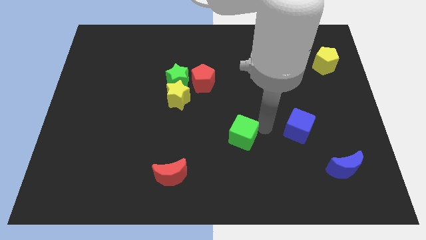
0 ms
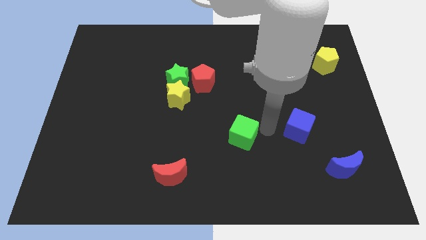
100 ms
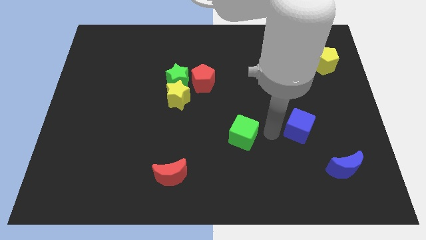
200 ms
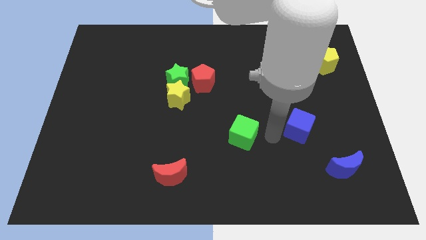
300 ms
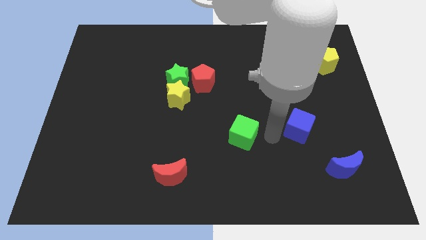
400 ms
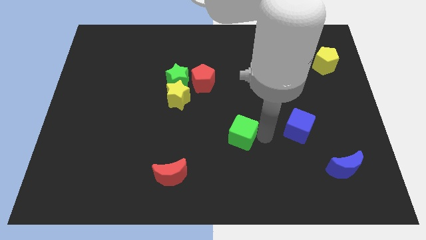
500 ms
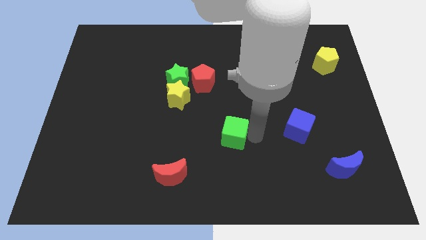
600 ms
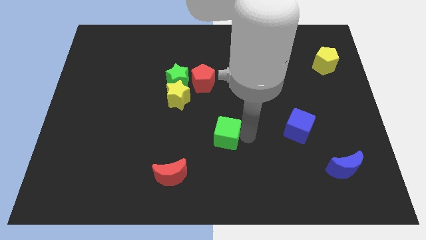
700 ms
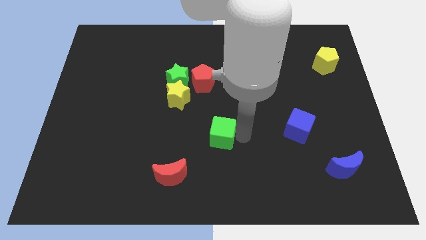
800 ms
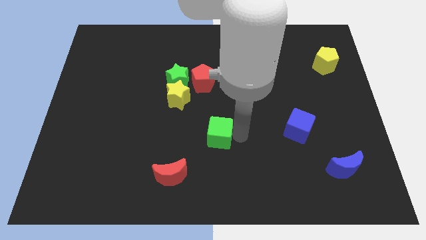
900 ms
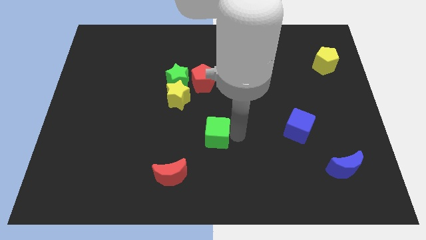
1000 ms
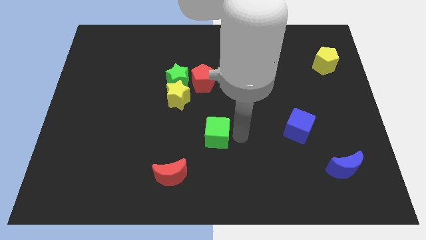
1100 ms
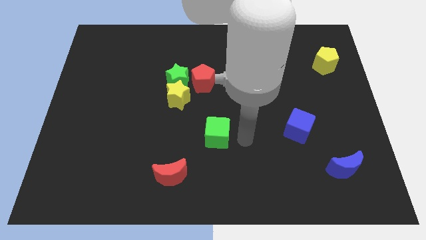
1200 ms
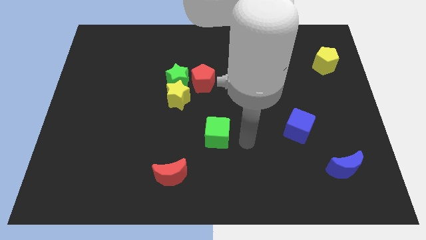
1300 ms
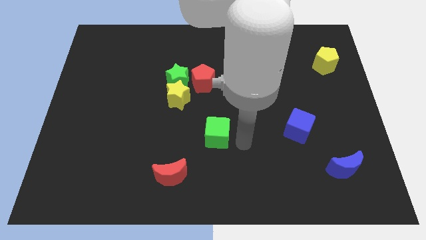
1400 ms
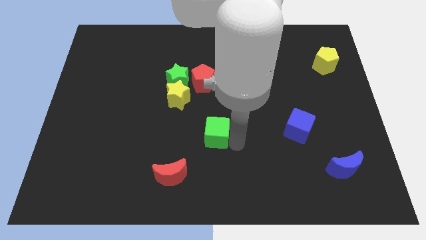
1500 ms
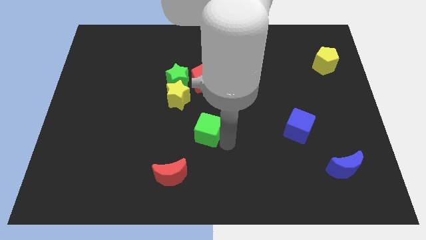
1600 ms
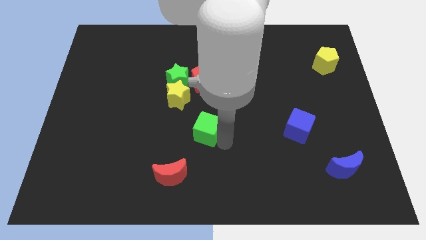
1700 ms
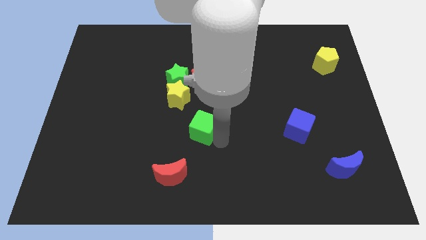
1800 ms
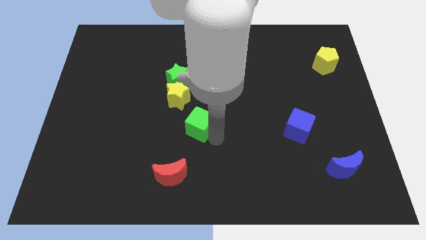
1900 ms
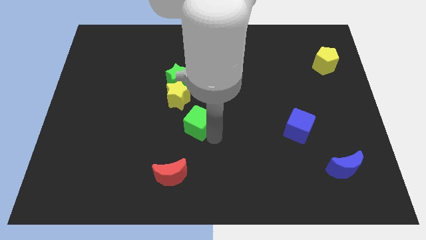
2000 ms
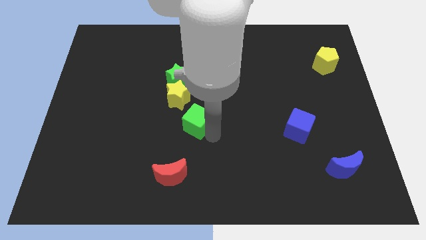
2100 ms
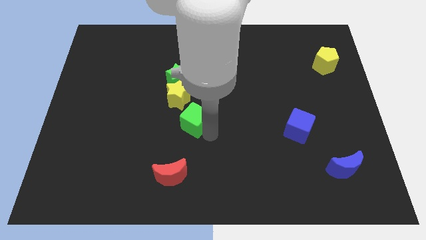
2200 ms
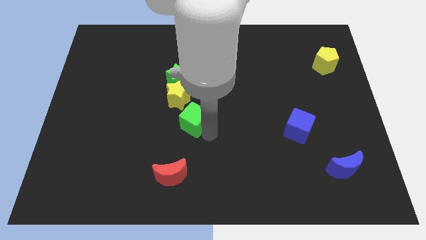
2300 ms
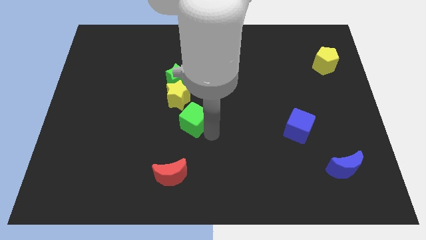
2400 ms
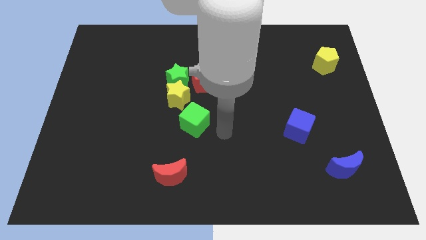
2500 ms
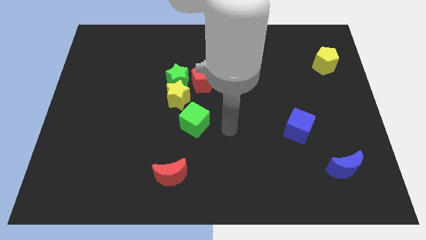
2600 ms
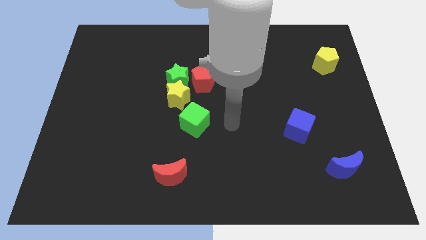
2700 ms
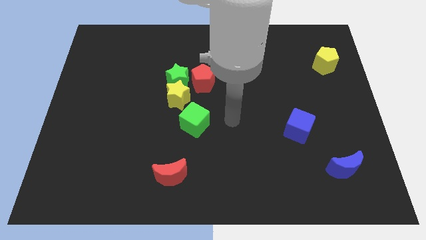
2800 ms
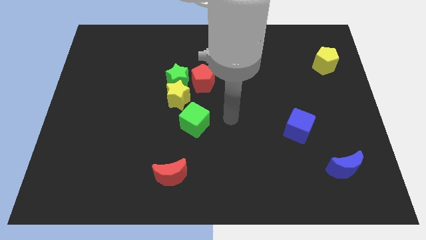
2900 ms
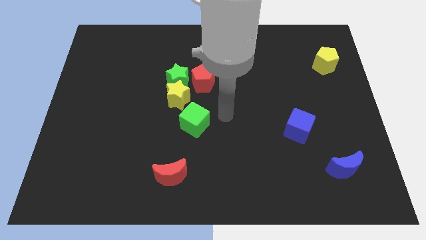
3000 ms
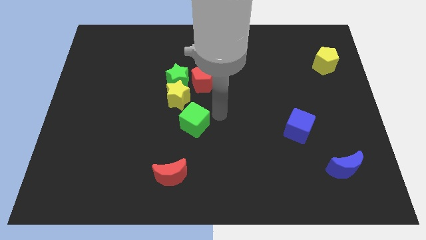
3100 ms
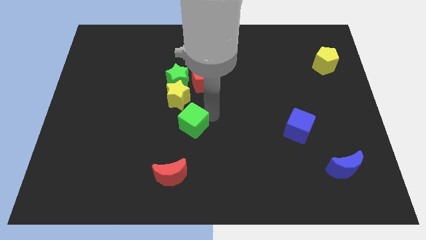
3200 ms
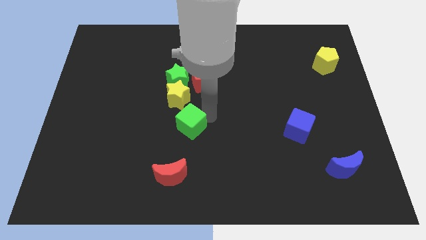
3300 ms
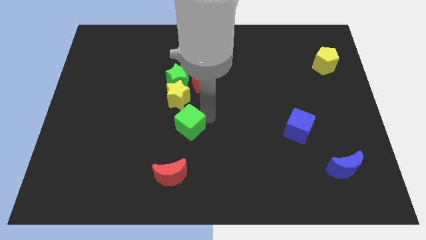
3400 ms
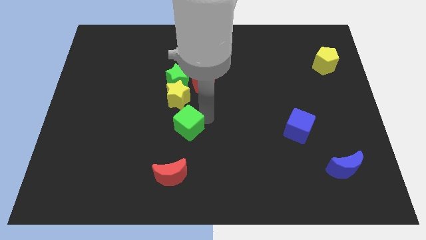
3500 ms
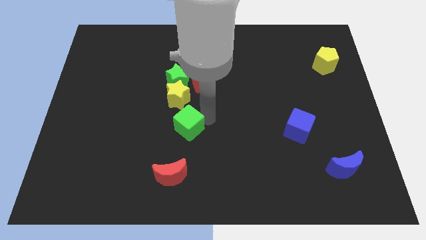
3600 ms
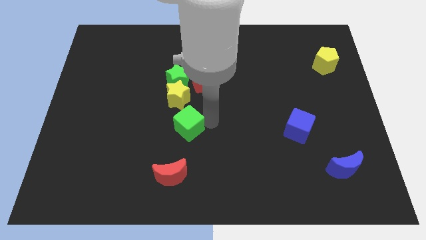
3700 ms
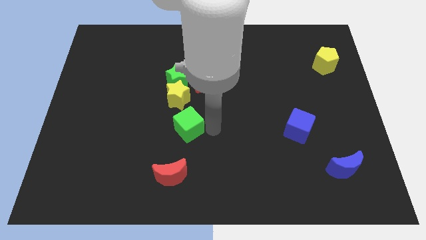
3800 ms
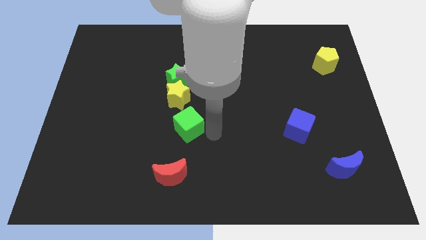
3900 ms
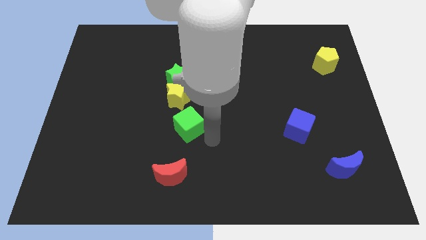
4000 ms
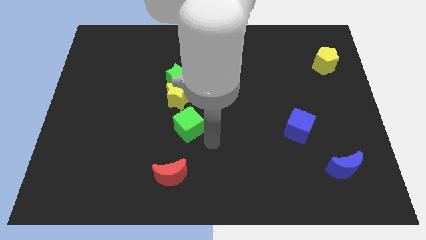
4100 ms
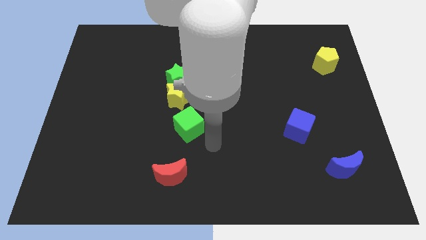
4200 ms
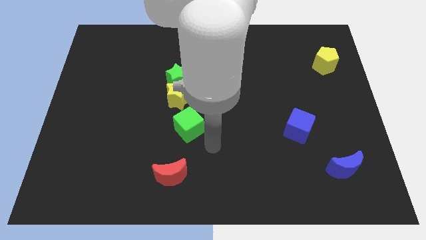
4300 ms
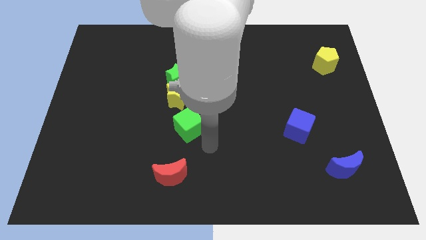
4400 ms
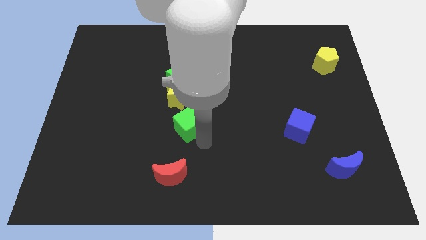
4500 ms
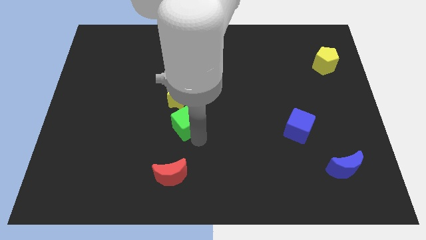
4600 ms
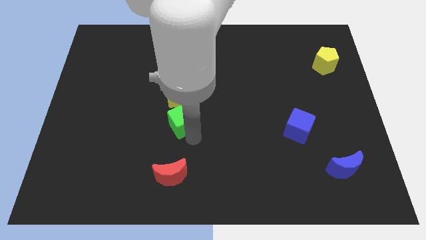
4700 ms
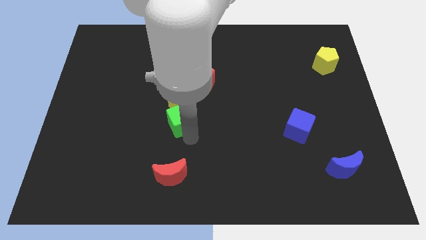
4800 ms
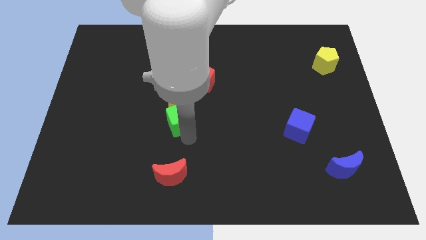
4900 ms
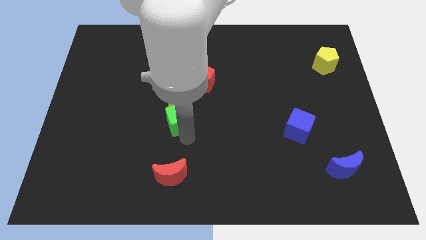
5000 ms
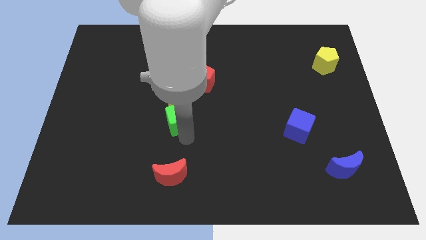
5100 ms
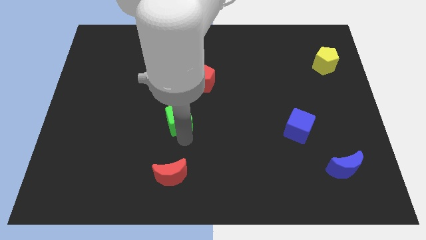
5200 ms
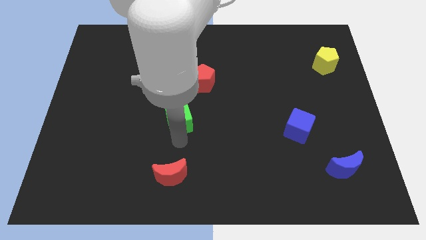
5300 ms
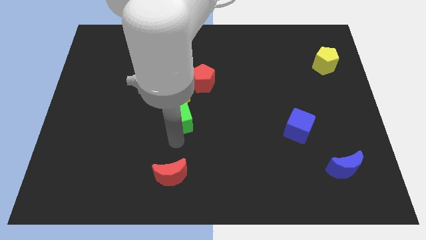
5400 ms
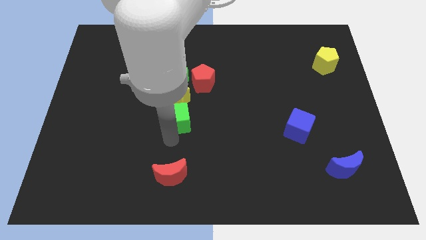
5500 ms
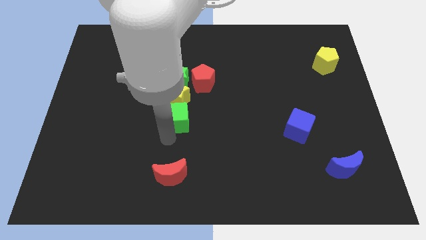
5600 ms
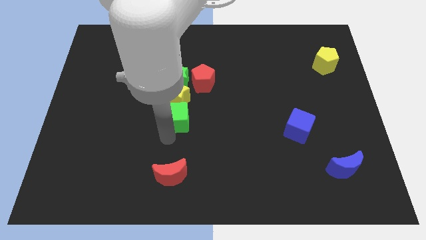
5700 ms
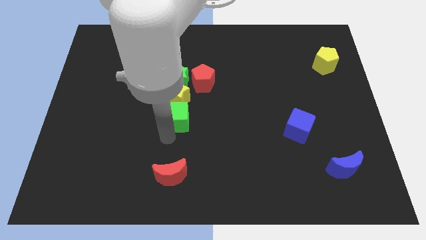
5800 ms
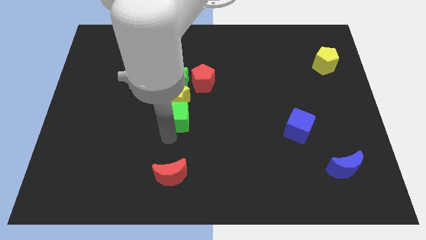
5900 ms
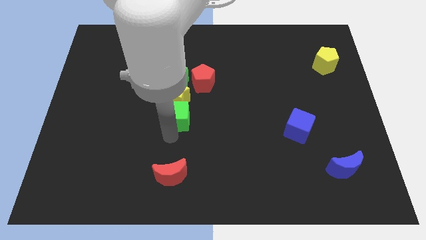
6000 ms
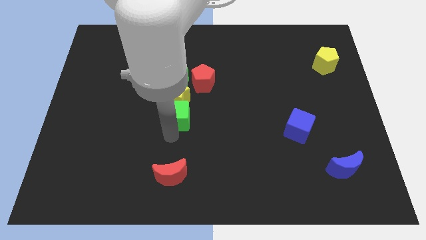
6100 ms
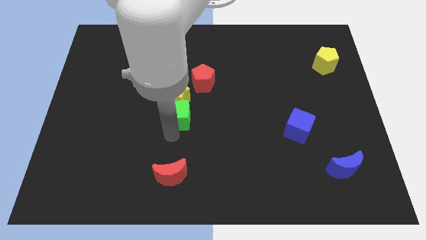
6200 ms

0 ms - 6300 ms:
move green cube below yellow star

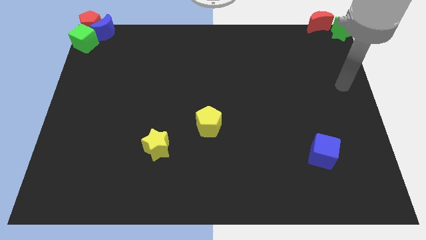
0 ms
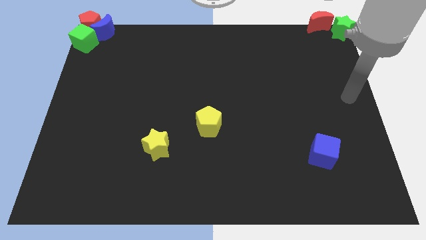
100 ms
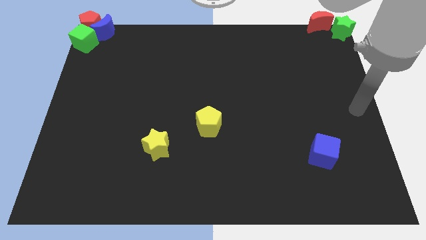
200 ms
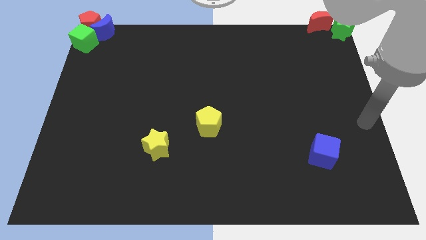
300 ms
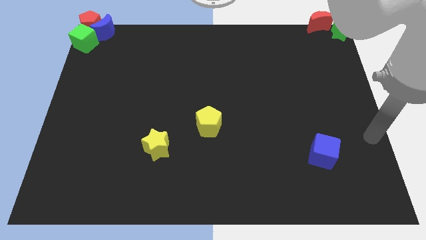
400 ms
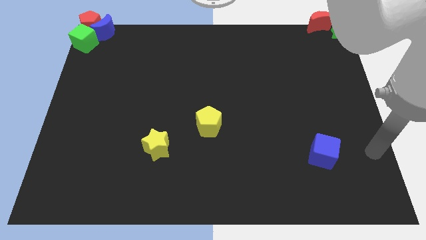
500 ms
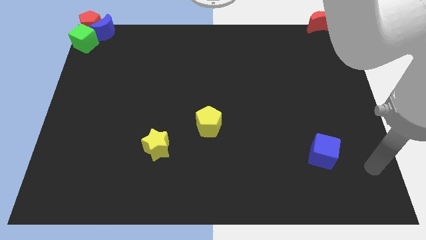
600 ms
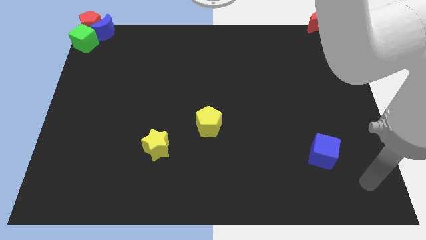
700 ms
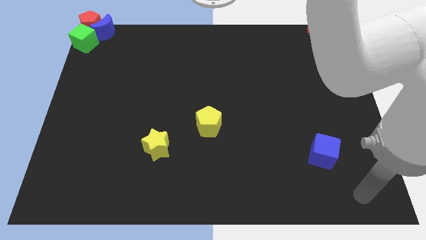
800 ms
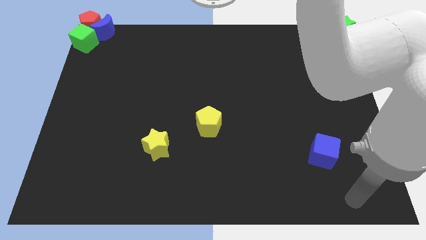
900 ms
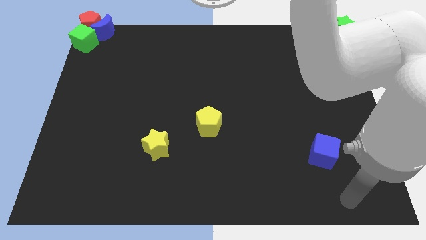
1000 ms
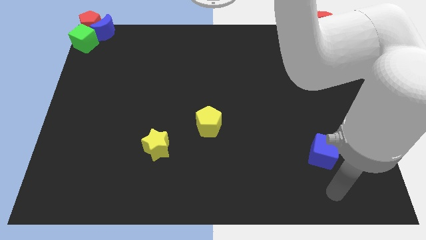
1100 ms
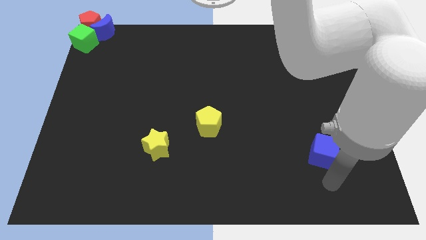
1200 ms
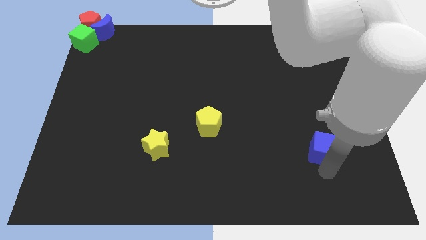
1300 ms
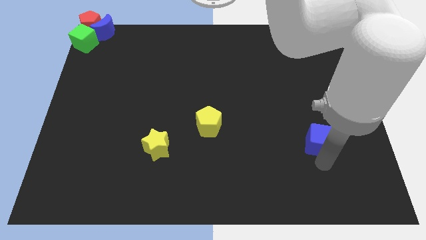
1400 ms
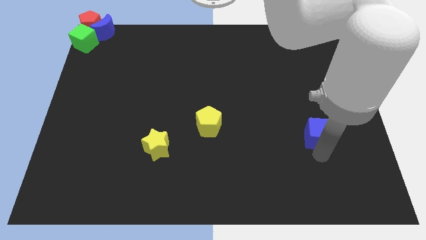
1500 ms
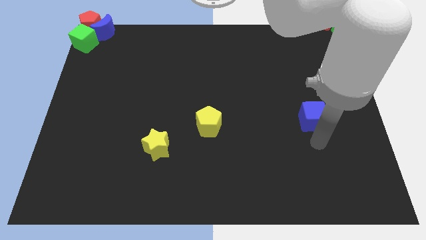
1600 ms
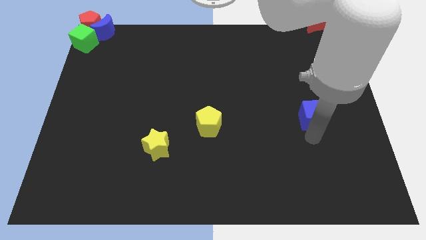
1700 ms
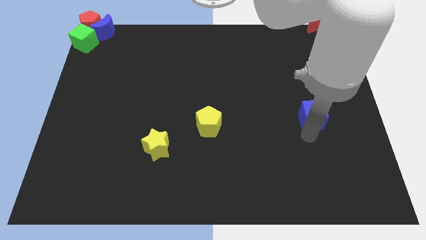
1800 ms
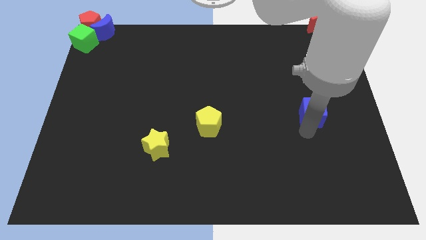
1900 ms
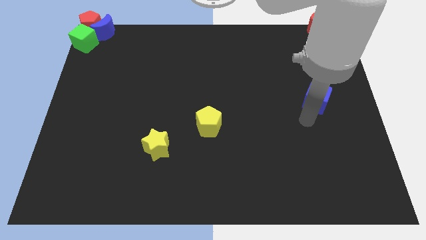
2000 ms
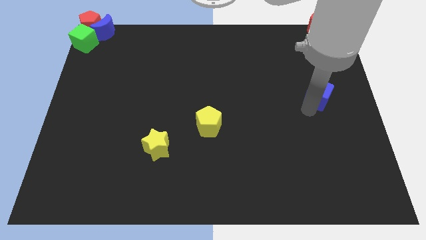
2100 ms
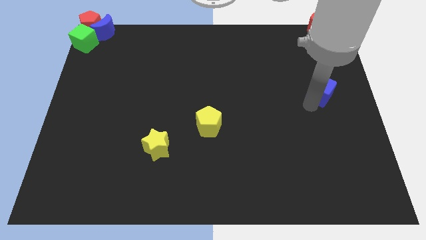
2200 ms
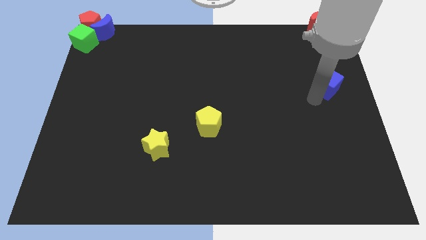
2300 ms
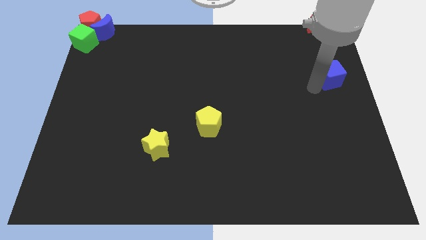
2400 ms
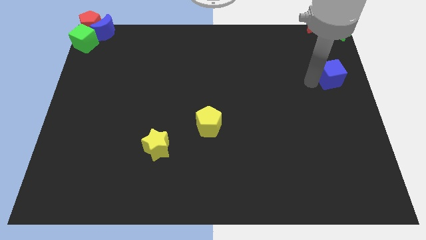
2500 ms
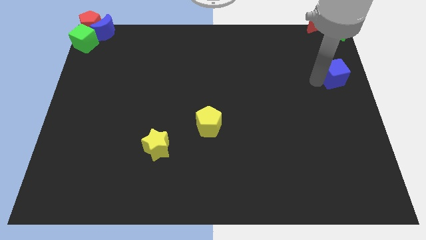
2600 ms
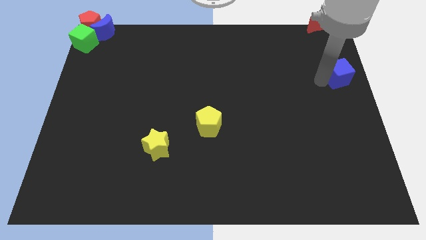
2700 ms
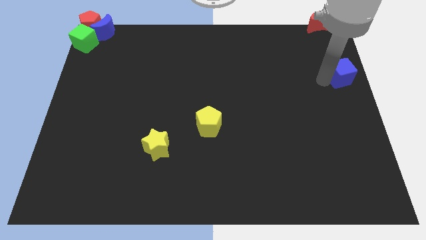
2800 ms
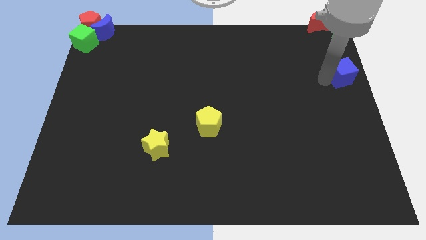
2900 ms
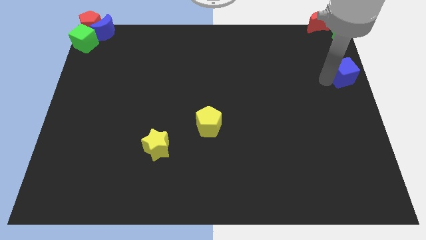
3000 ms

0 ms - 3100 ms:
move blue cube slightly upwards at the right center
